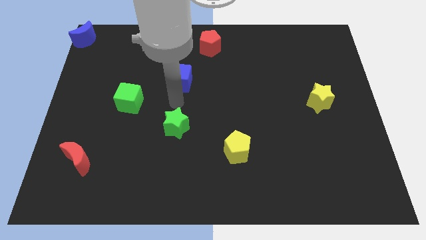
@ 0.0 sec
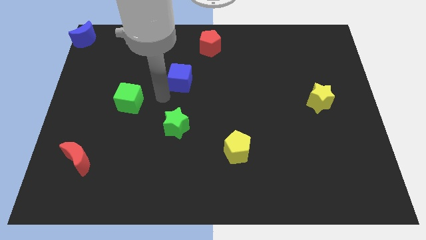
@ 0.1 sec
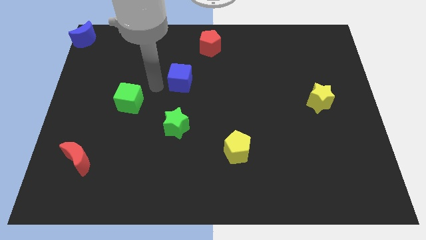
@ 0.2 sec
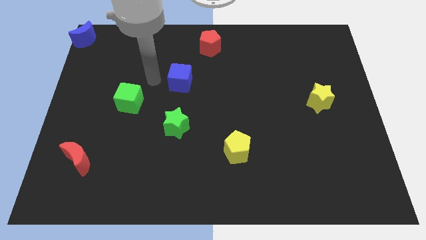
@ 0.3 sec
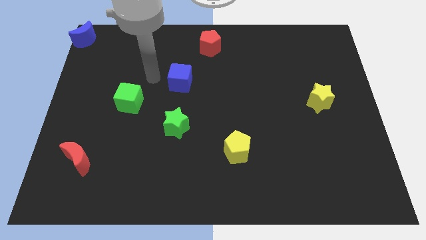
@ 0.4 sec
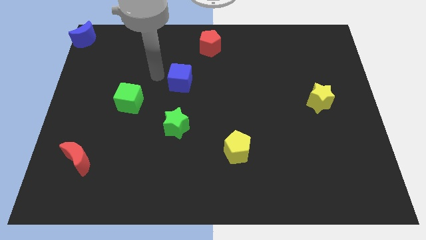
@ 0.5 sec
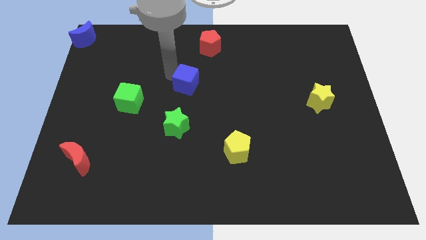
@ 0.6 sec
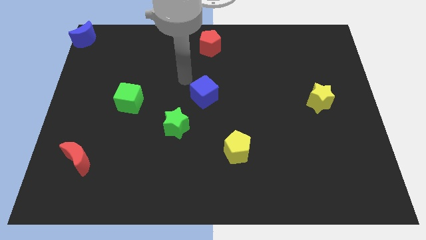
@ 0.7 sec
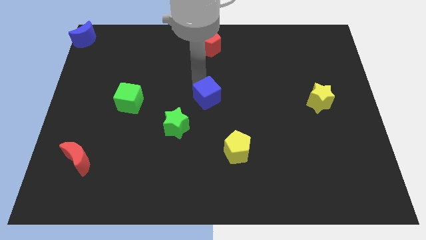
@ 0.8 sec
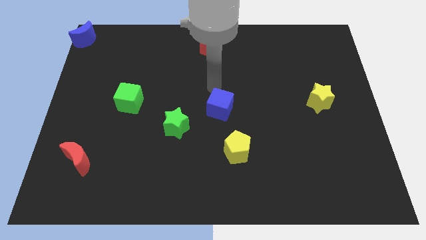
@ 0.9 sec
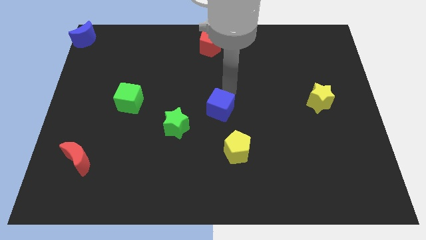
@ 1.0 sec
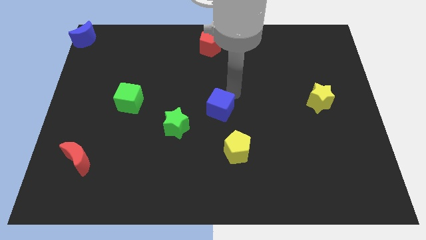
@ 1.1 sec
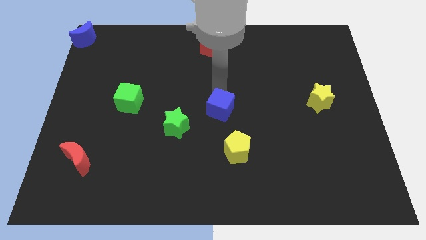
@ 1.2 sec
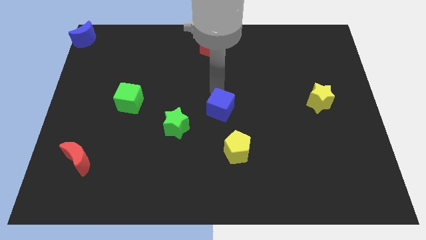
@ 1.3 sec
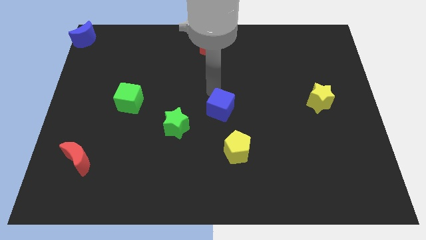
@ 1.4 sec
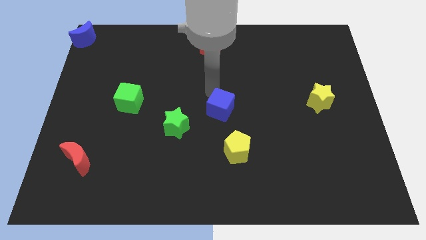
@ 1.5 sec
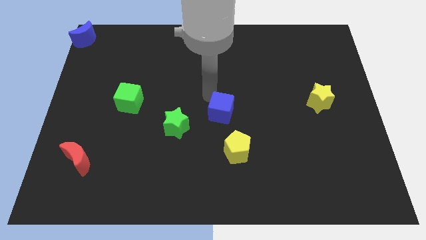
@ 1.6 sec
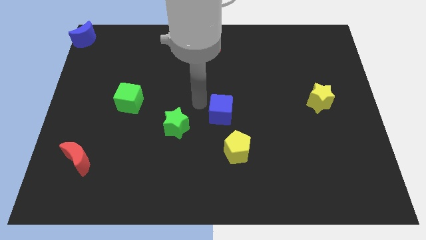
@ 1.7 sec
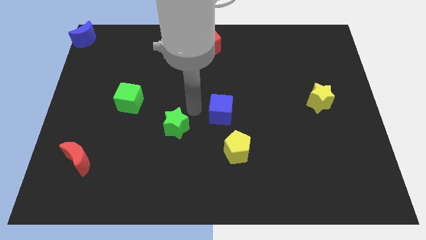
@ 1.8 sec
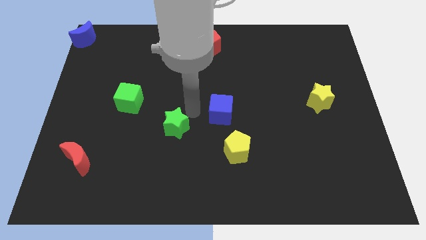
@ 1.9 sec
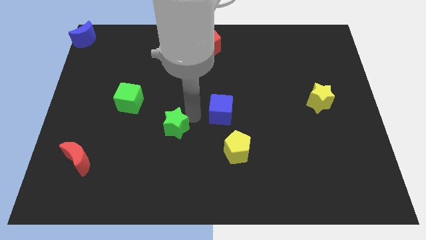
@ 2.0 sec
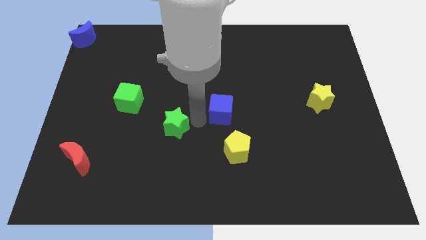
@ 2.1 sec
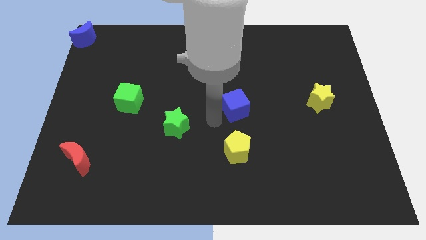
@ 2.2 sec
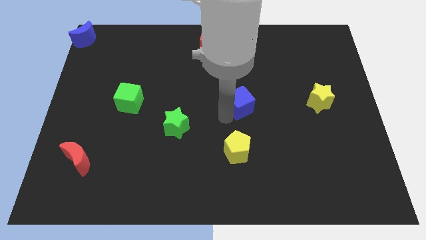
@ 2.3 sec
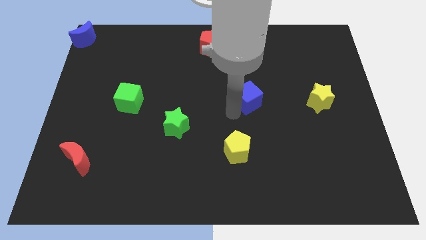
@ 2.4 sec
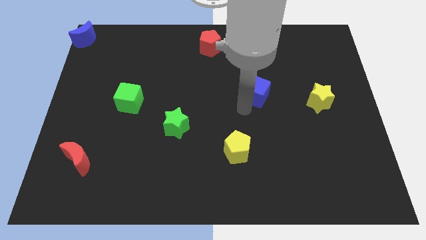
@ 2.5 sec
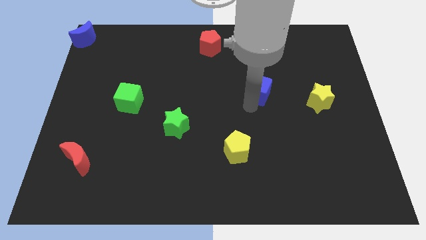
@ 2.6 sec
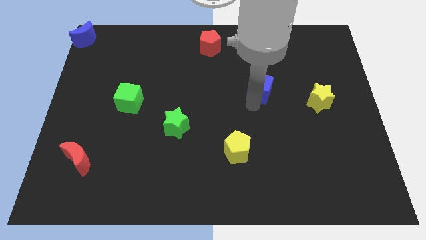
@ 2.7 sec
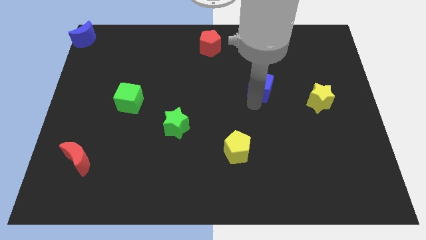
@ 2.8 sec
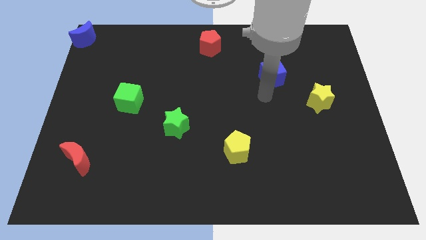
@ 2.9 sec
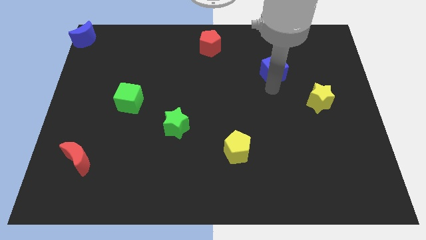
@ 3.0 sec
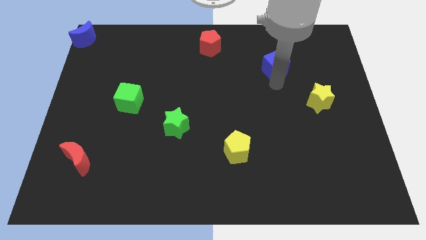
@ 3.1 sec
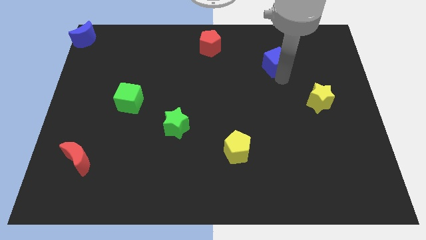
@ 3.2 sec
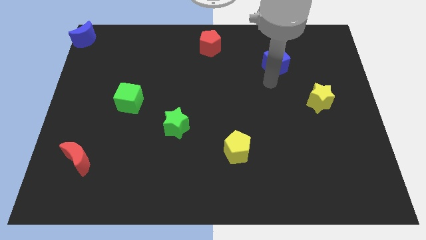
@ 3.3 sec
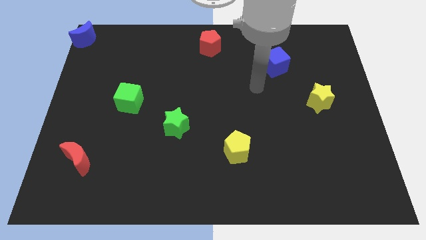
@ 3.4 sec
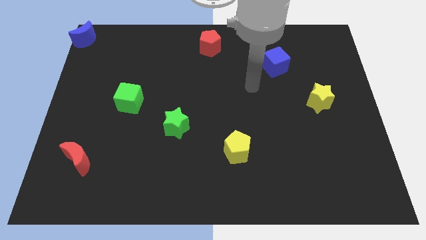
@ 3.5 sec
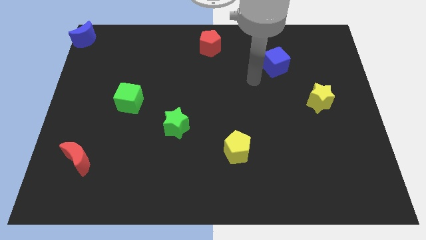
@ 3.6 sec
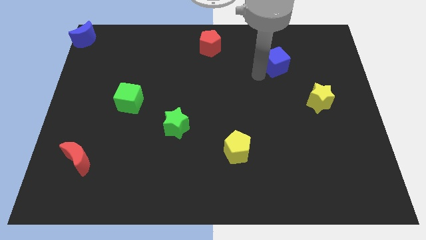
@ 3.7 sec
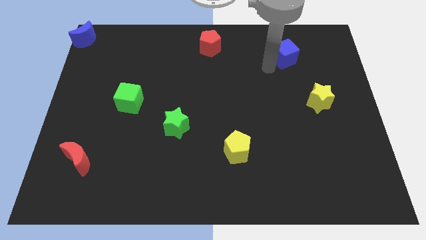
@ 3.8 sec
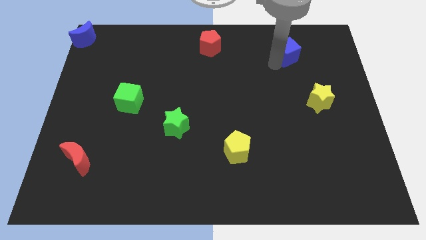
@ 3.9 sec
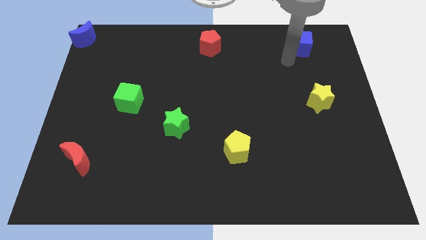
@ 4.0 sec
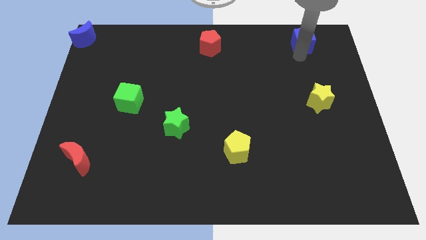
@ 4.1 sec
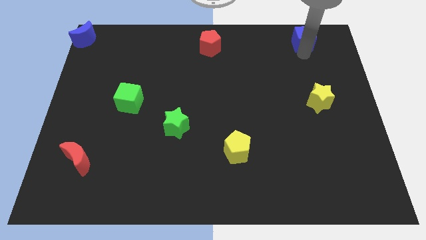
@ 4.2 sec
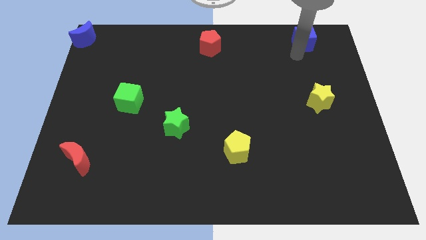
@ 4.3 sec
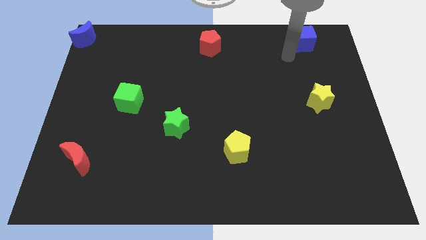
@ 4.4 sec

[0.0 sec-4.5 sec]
place the blue cube to the right of the red pentagon

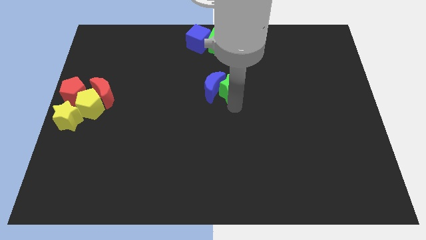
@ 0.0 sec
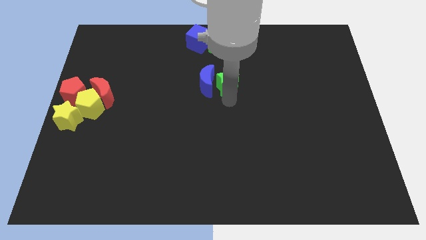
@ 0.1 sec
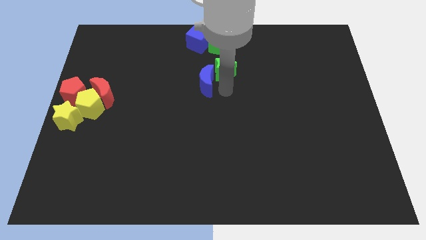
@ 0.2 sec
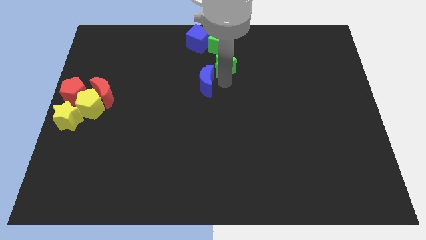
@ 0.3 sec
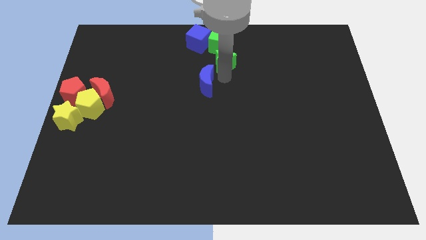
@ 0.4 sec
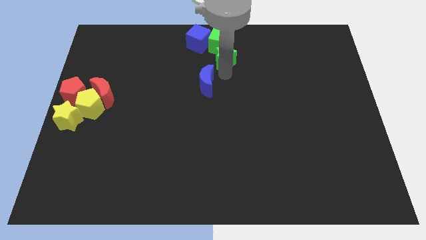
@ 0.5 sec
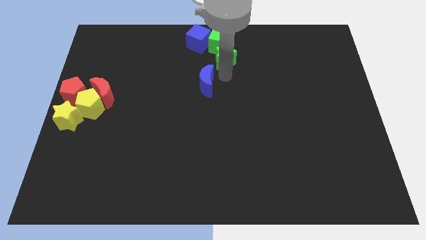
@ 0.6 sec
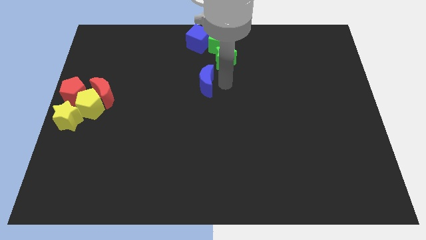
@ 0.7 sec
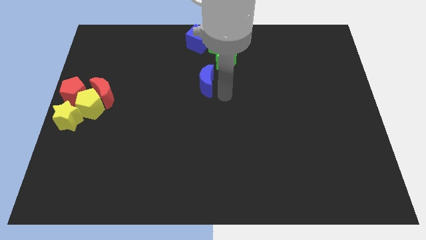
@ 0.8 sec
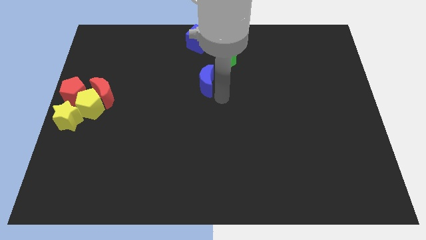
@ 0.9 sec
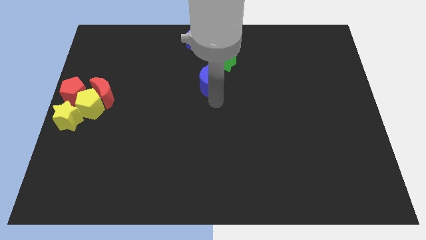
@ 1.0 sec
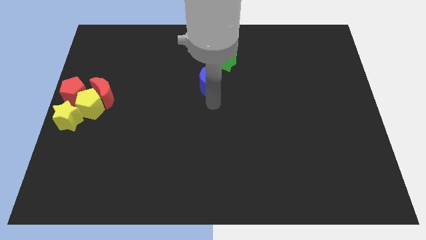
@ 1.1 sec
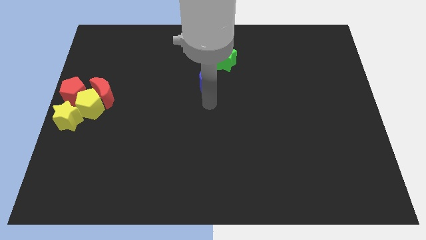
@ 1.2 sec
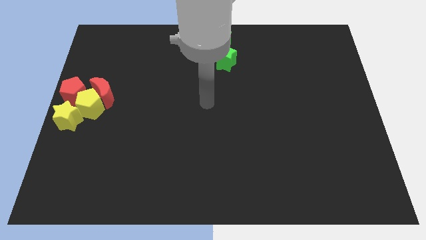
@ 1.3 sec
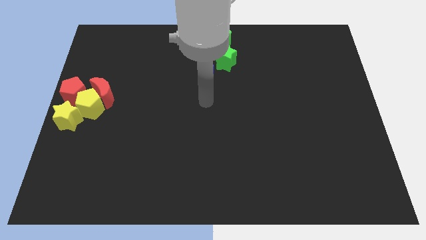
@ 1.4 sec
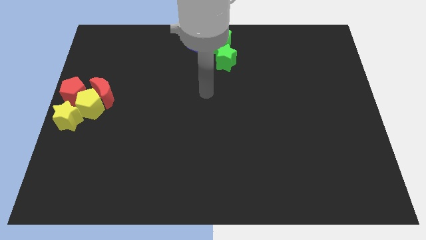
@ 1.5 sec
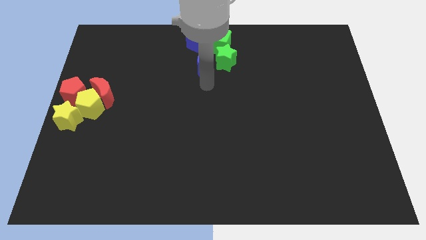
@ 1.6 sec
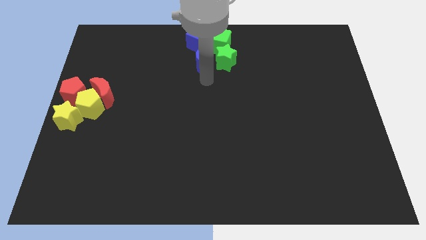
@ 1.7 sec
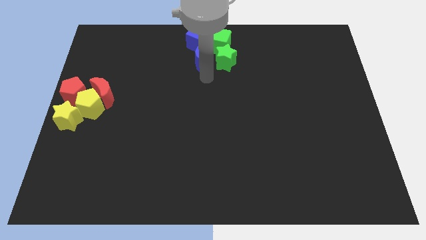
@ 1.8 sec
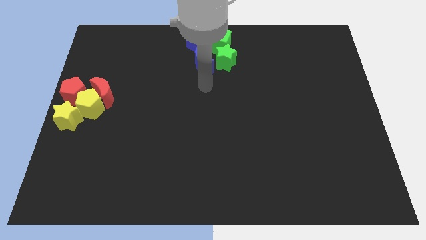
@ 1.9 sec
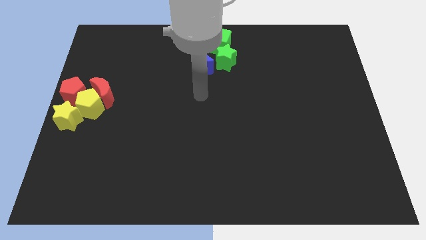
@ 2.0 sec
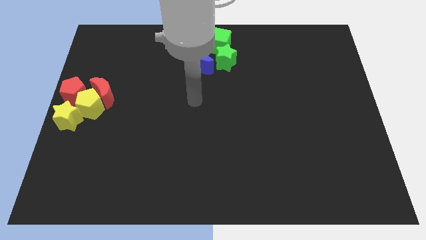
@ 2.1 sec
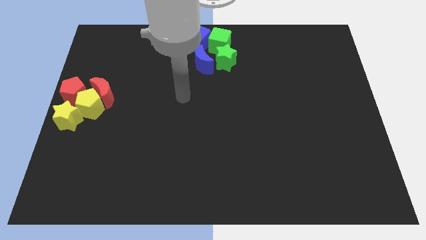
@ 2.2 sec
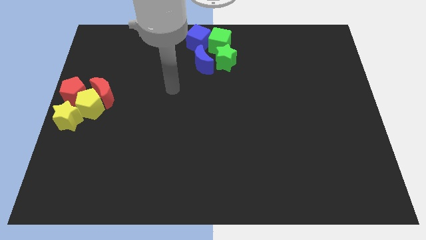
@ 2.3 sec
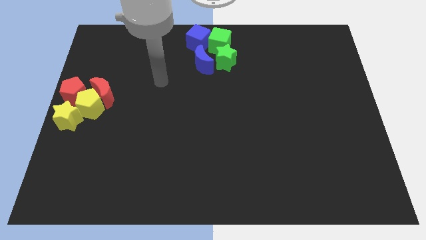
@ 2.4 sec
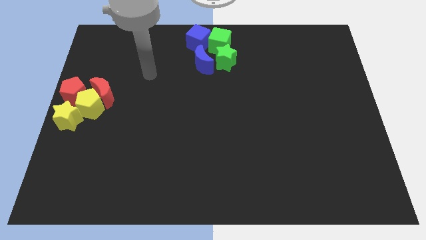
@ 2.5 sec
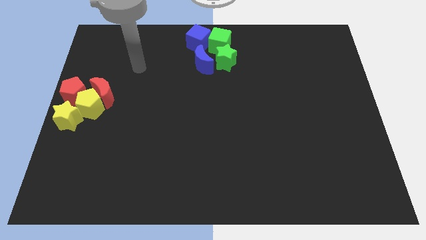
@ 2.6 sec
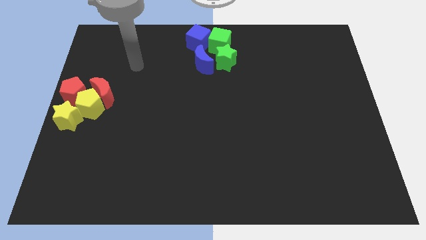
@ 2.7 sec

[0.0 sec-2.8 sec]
move the green star and blue crescent towards the top center of the board

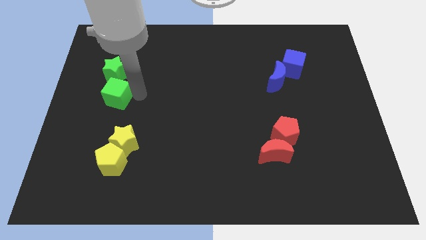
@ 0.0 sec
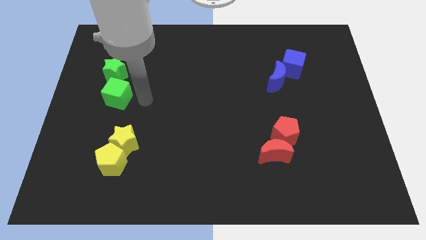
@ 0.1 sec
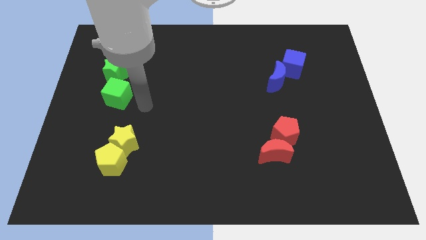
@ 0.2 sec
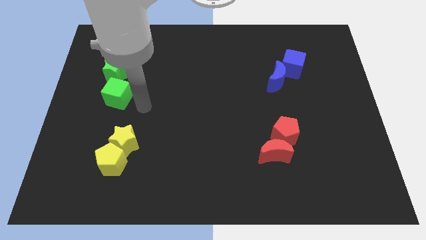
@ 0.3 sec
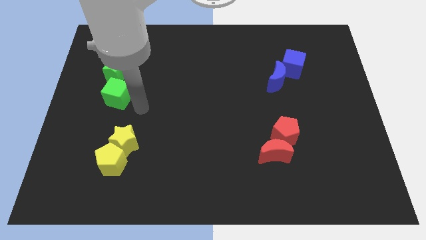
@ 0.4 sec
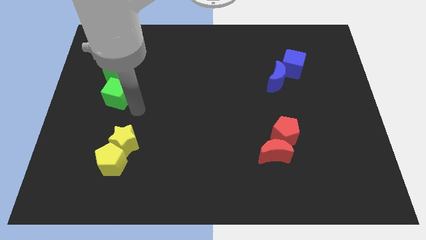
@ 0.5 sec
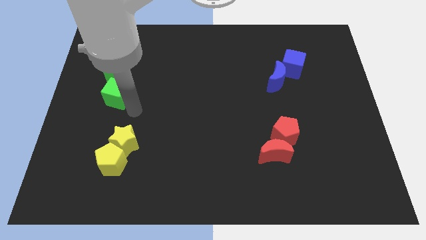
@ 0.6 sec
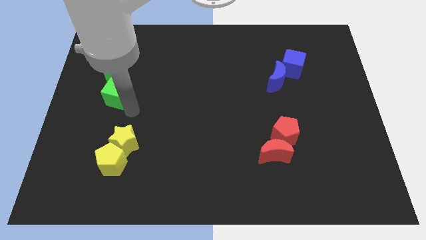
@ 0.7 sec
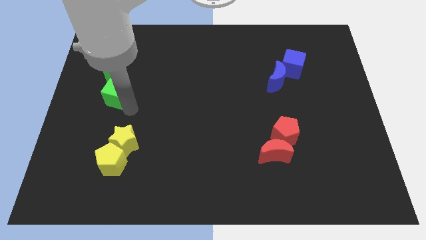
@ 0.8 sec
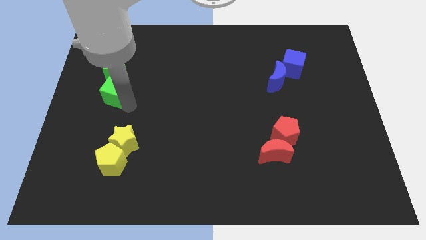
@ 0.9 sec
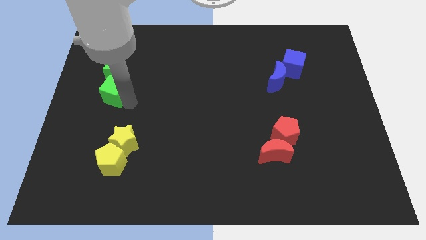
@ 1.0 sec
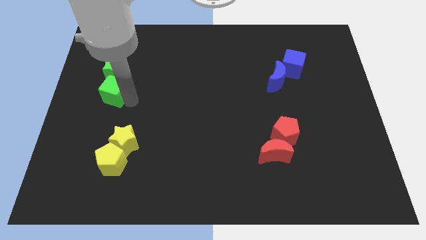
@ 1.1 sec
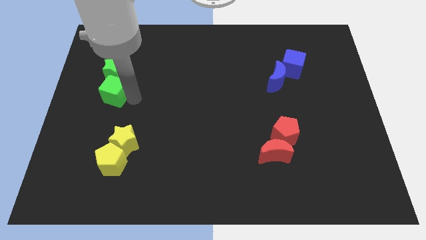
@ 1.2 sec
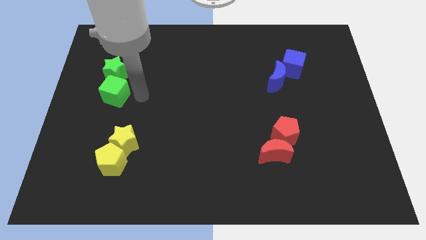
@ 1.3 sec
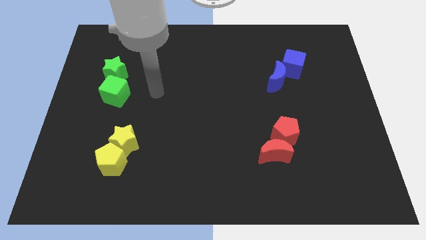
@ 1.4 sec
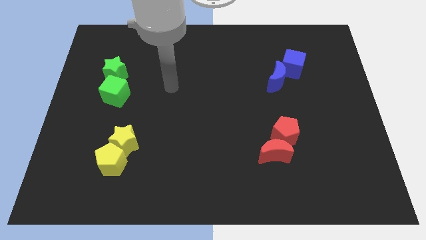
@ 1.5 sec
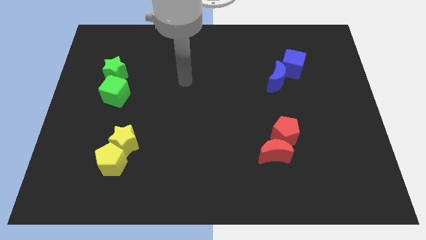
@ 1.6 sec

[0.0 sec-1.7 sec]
slightly move the green cube
